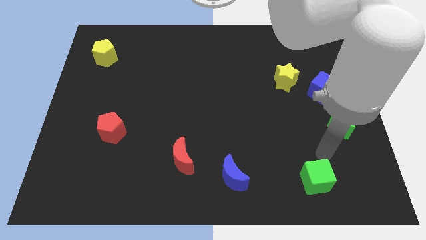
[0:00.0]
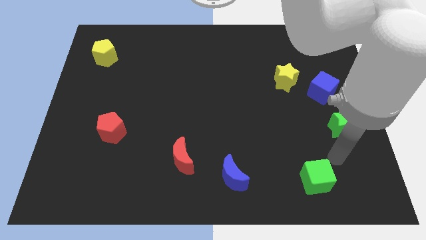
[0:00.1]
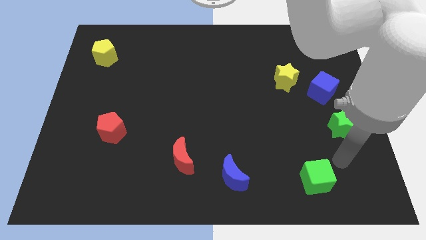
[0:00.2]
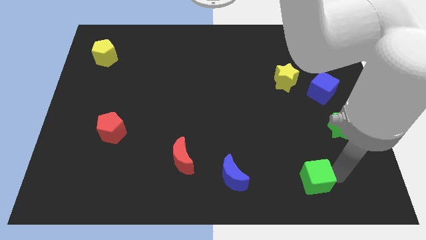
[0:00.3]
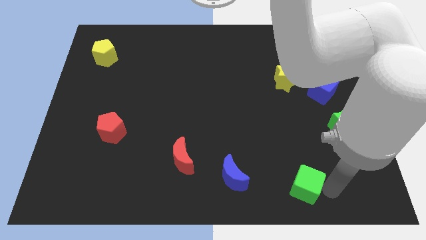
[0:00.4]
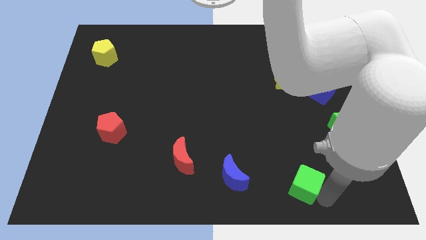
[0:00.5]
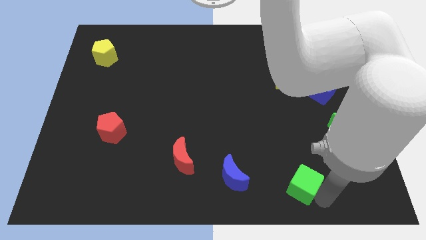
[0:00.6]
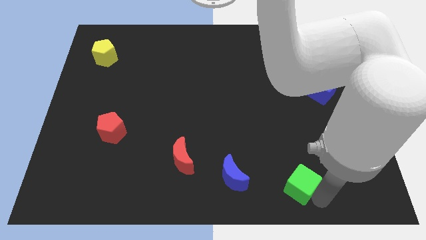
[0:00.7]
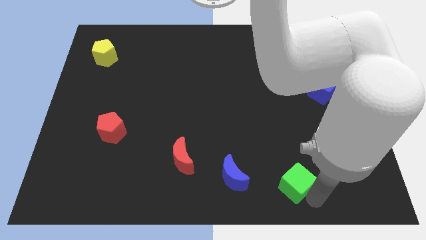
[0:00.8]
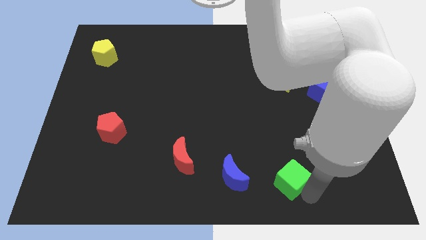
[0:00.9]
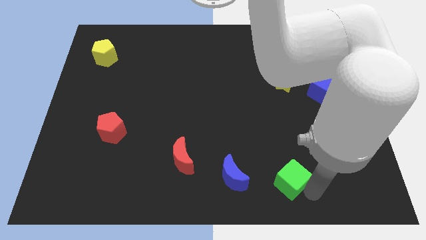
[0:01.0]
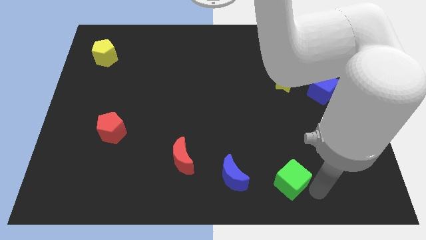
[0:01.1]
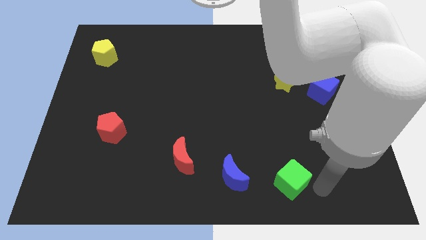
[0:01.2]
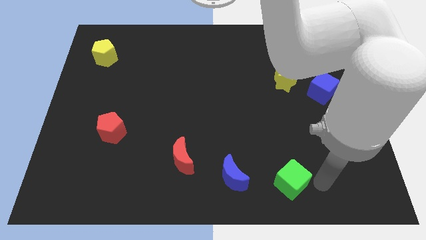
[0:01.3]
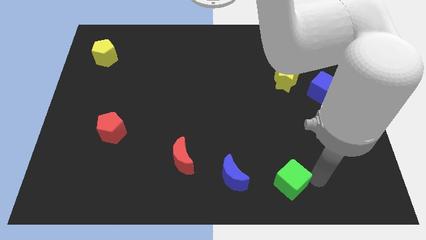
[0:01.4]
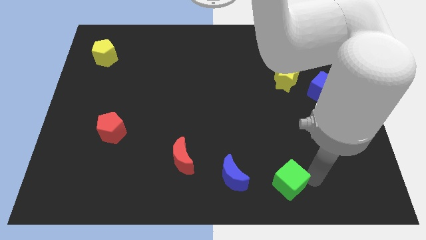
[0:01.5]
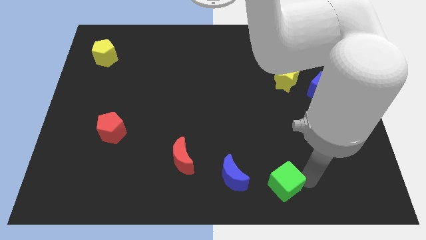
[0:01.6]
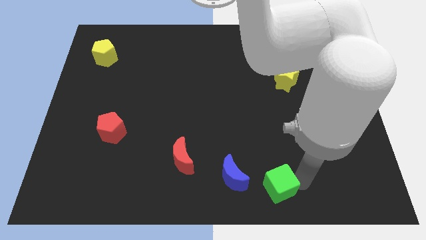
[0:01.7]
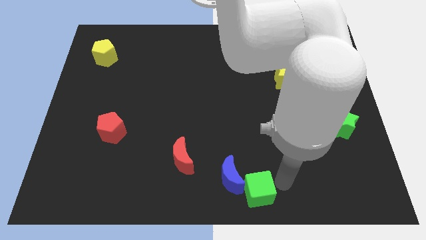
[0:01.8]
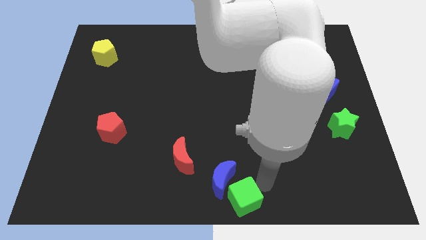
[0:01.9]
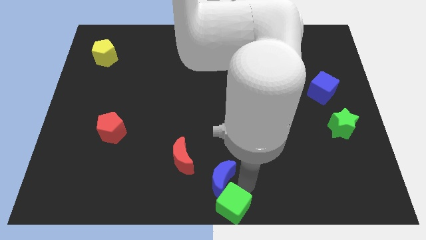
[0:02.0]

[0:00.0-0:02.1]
slide green cube to the bottom center

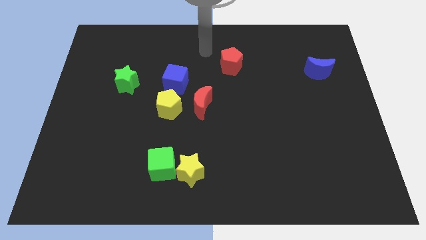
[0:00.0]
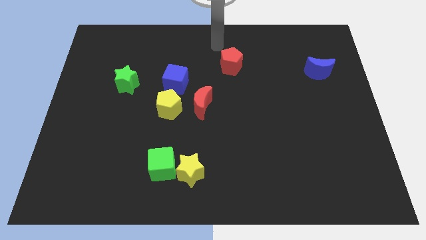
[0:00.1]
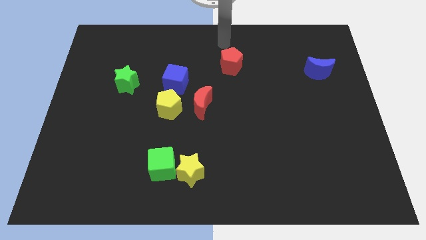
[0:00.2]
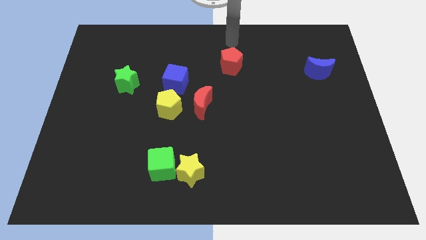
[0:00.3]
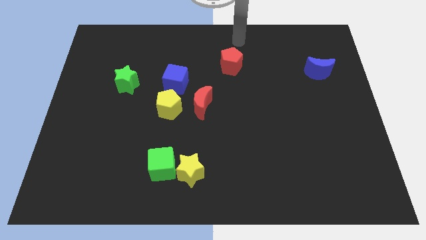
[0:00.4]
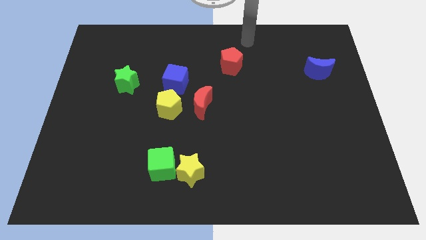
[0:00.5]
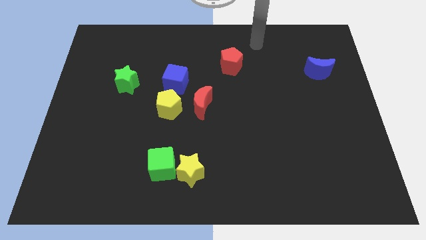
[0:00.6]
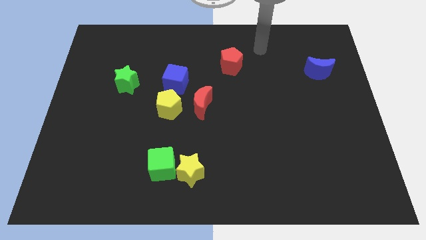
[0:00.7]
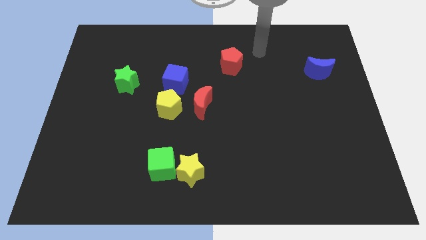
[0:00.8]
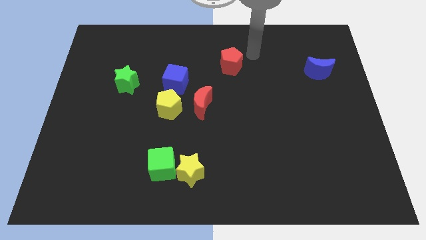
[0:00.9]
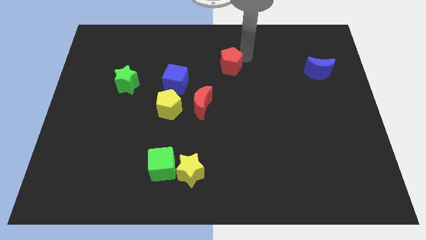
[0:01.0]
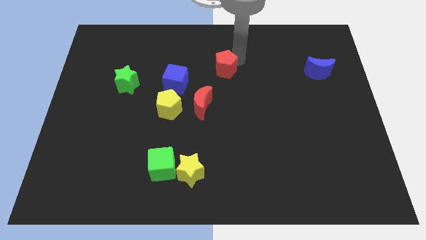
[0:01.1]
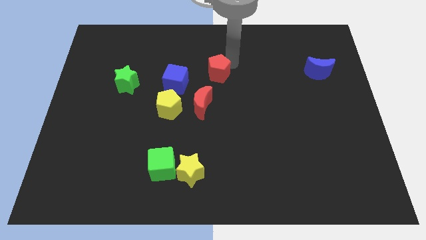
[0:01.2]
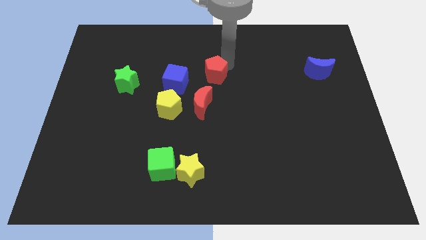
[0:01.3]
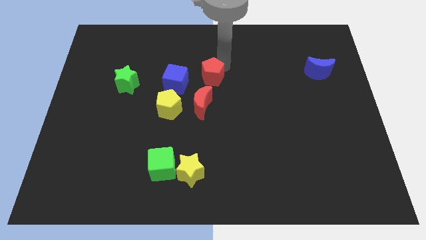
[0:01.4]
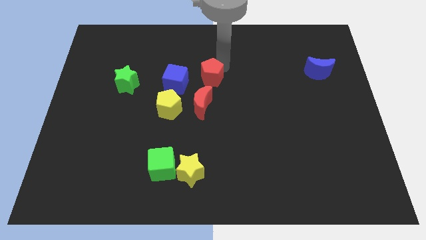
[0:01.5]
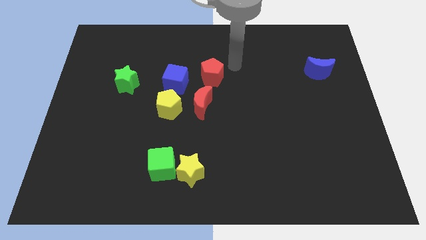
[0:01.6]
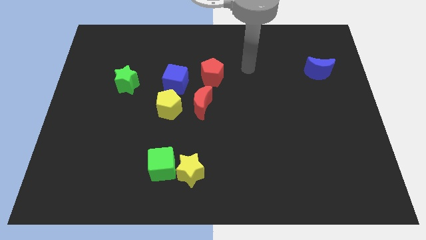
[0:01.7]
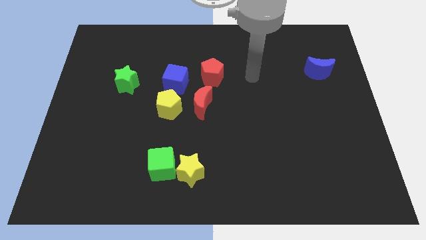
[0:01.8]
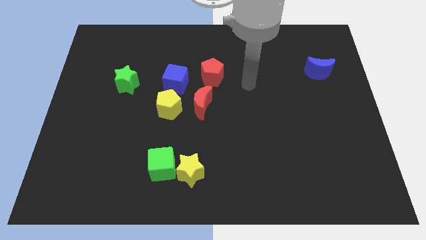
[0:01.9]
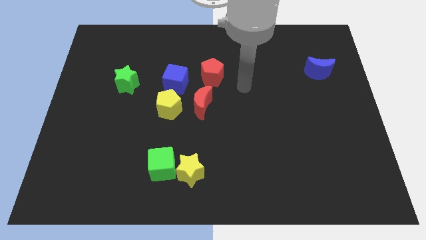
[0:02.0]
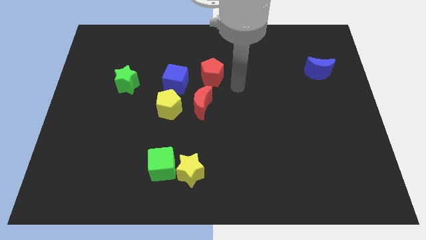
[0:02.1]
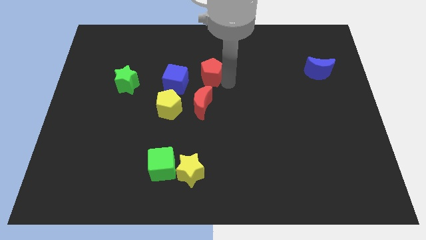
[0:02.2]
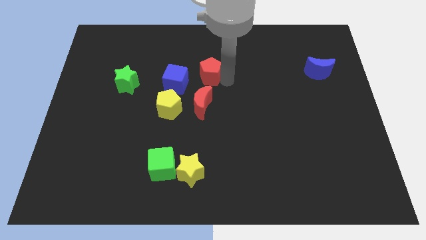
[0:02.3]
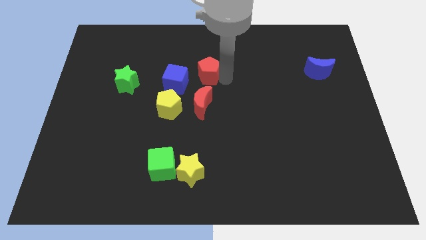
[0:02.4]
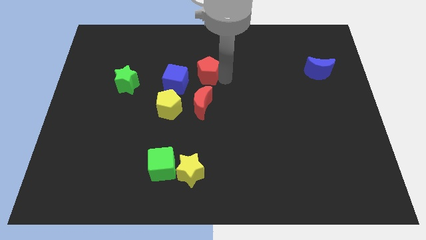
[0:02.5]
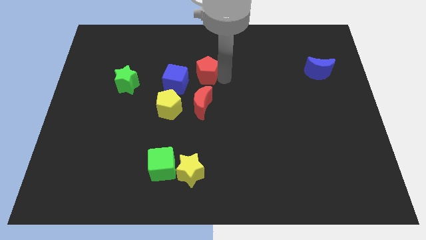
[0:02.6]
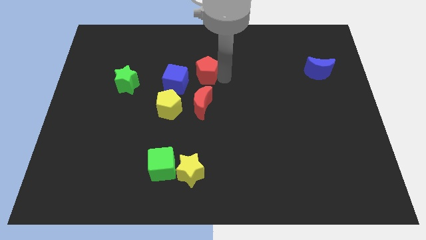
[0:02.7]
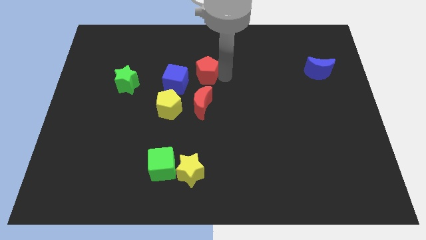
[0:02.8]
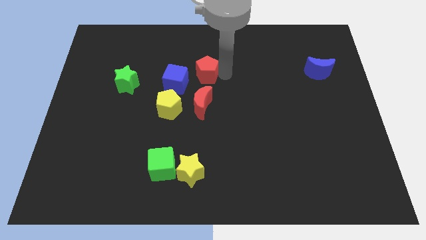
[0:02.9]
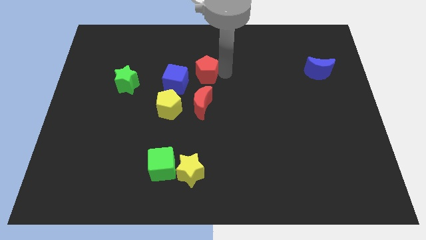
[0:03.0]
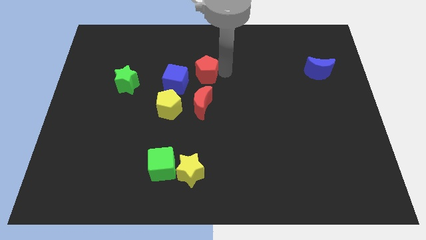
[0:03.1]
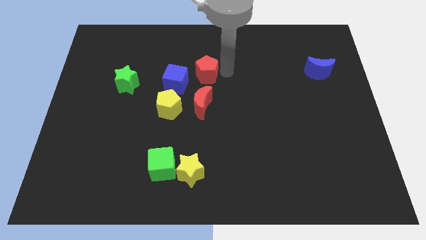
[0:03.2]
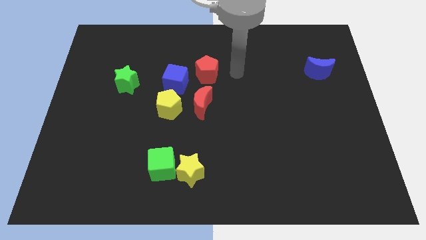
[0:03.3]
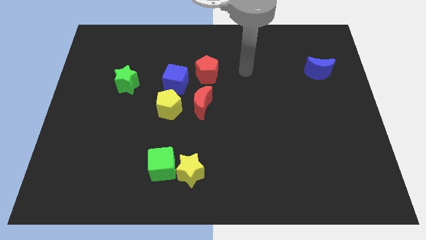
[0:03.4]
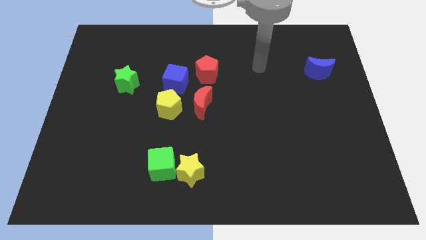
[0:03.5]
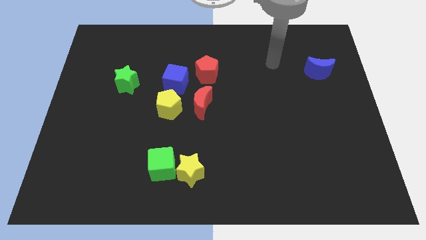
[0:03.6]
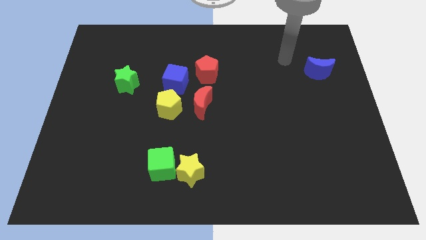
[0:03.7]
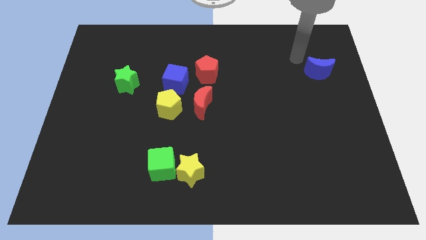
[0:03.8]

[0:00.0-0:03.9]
place the red pentagon on top of the red crescent

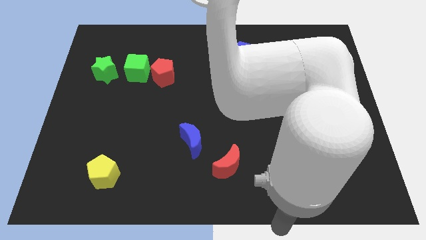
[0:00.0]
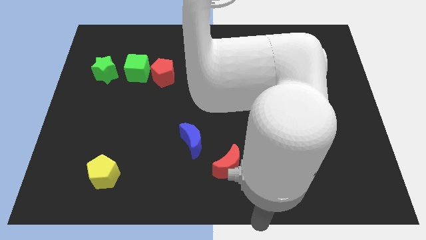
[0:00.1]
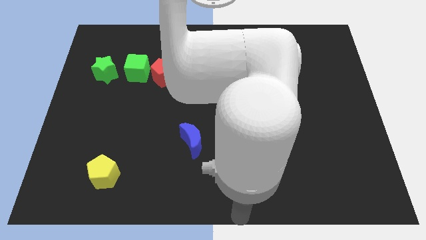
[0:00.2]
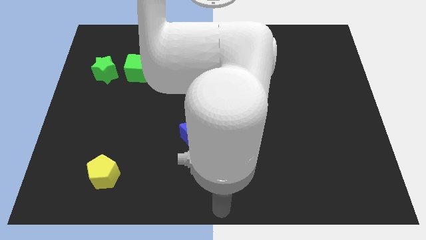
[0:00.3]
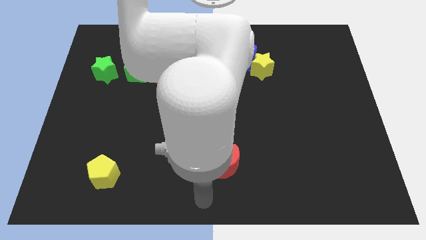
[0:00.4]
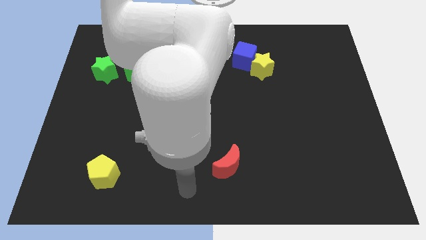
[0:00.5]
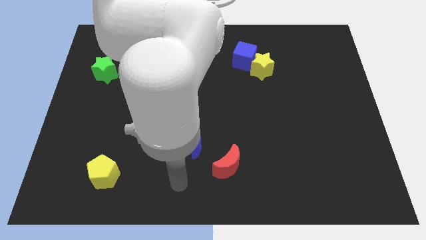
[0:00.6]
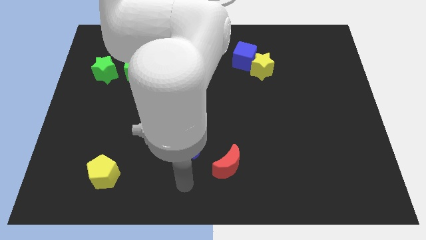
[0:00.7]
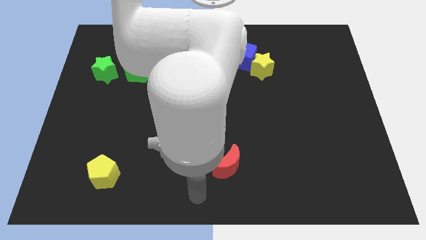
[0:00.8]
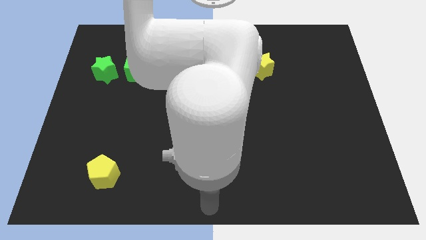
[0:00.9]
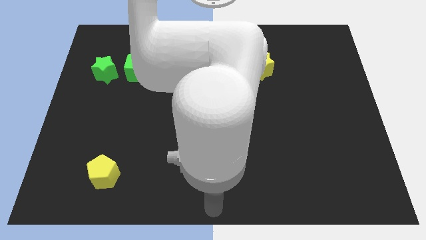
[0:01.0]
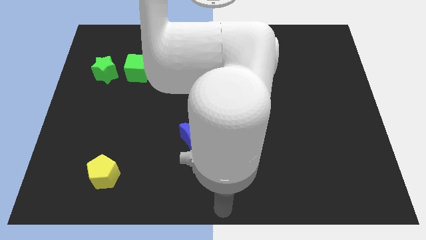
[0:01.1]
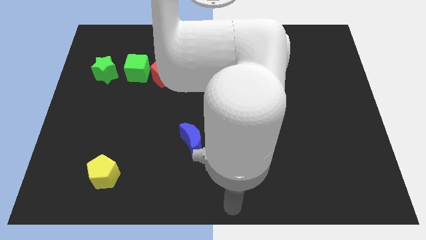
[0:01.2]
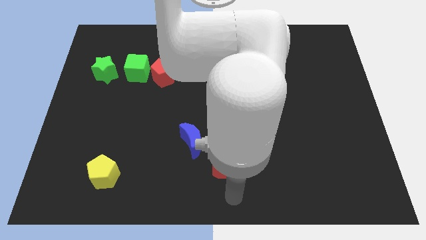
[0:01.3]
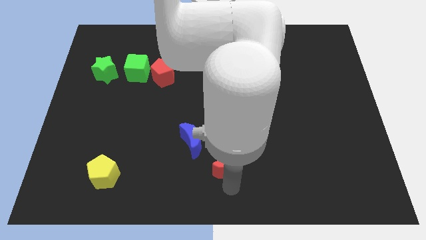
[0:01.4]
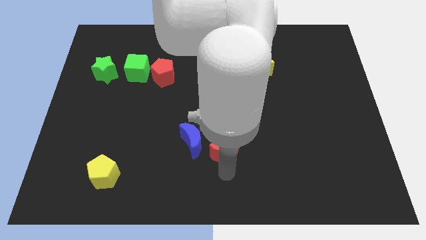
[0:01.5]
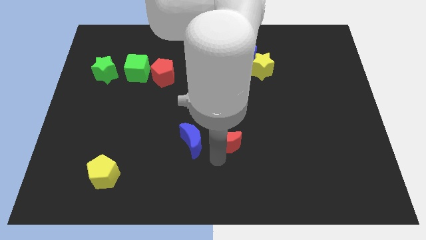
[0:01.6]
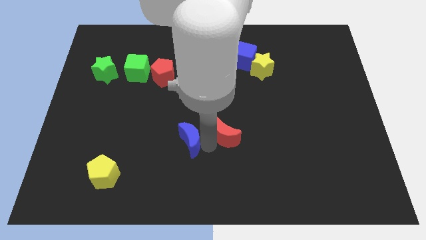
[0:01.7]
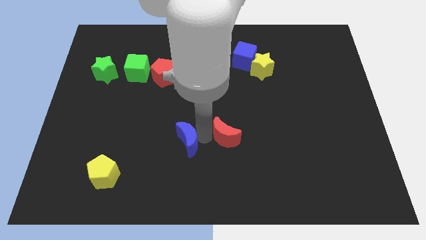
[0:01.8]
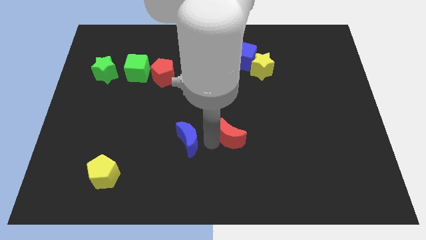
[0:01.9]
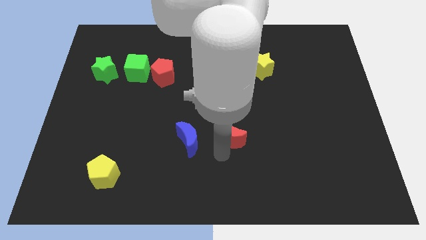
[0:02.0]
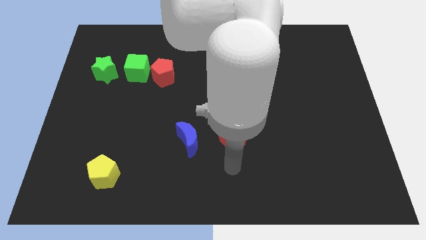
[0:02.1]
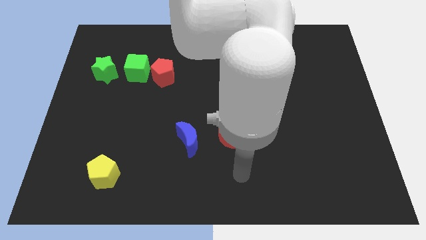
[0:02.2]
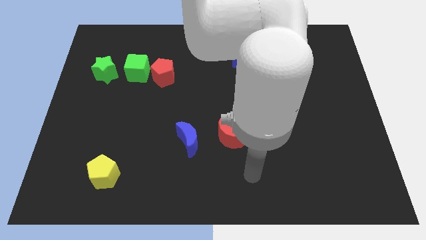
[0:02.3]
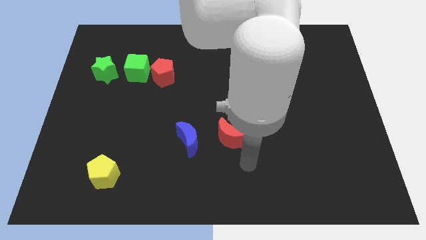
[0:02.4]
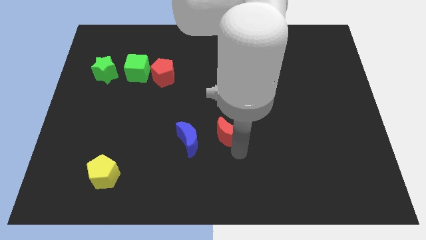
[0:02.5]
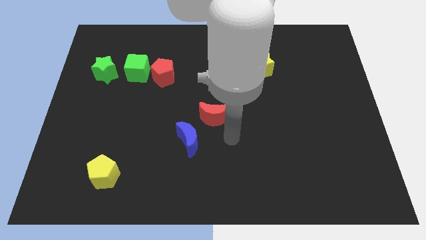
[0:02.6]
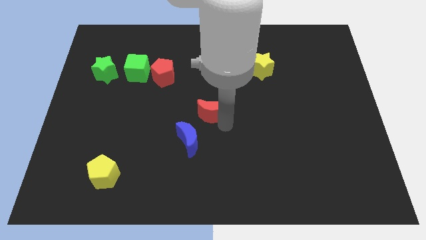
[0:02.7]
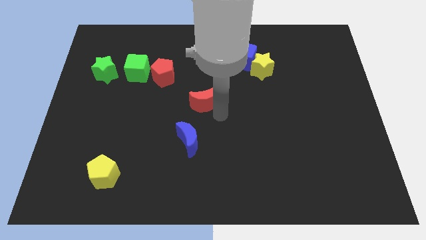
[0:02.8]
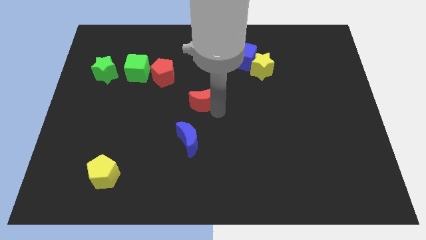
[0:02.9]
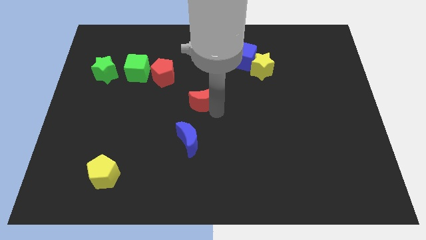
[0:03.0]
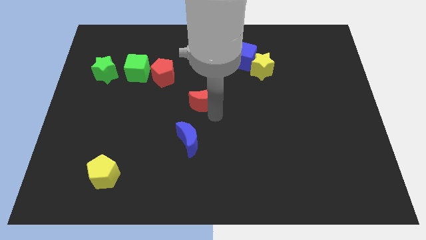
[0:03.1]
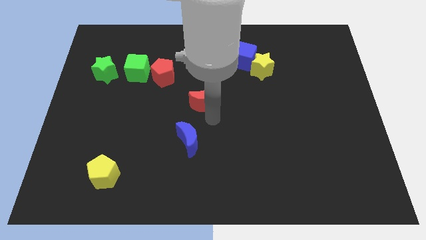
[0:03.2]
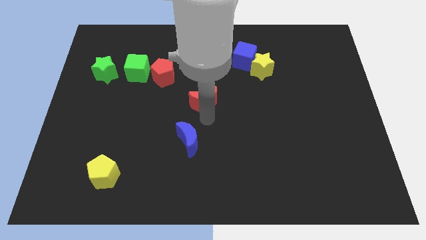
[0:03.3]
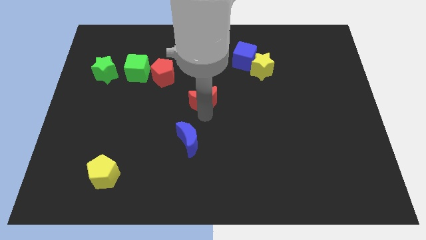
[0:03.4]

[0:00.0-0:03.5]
place the red crescent at the center of the board
